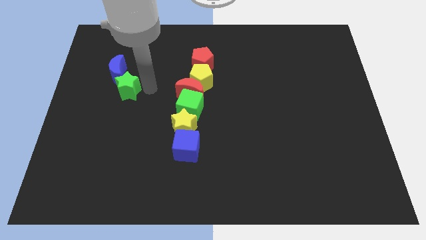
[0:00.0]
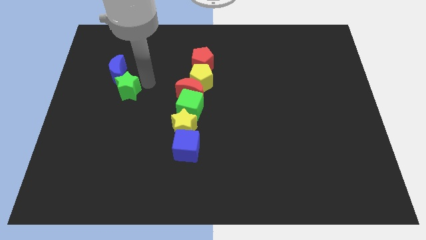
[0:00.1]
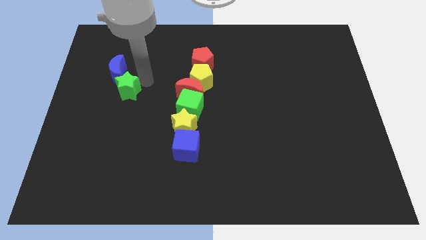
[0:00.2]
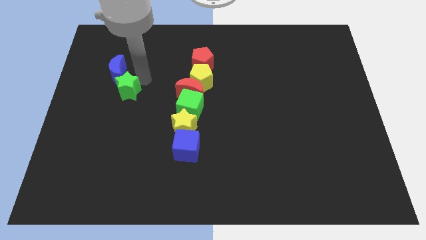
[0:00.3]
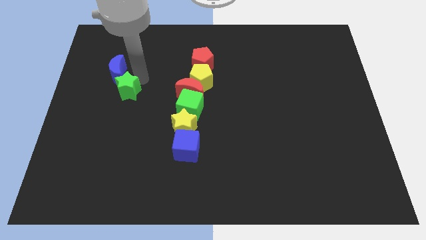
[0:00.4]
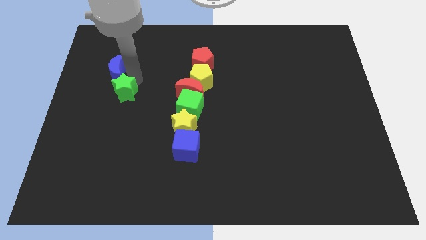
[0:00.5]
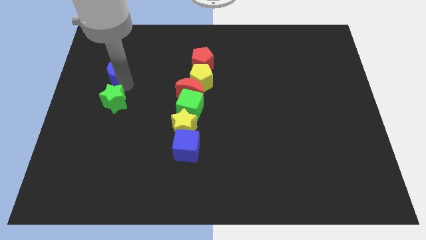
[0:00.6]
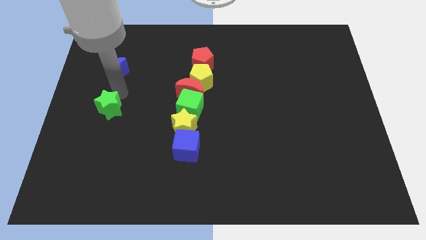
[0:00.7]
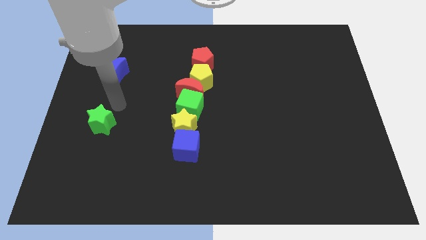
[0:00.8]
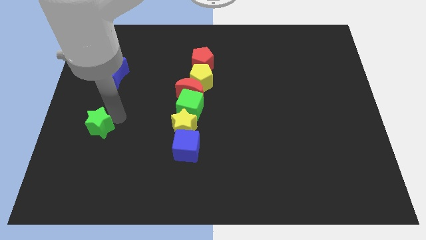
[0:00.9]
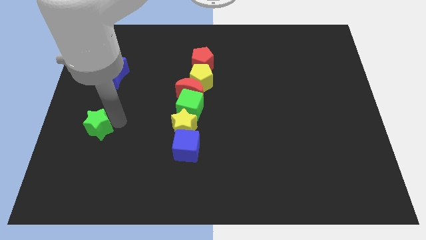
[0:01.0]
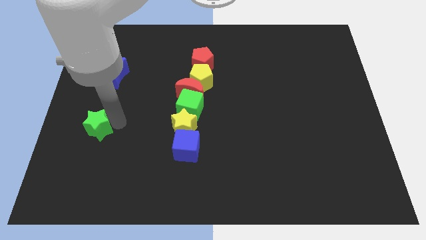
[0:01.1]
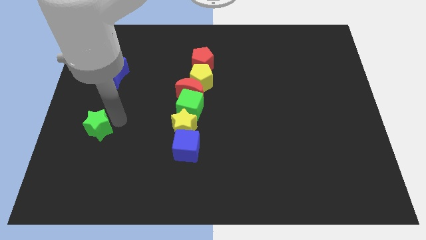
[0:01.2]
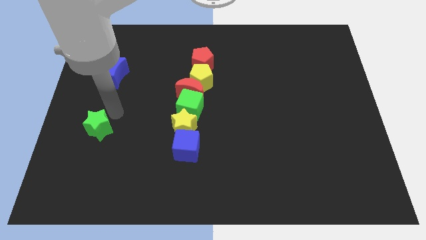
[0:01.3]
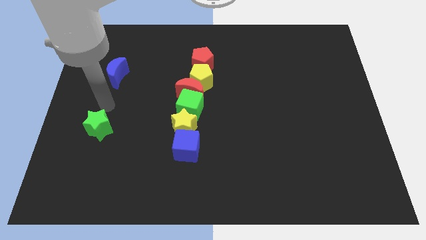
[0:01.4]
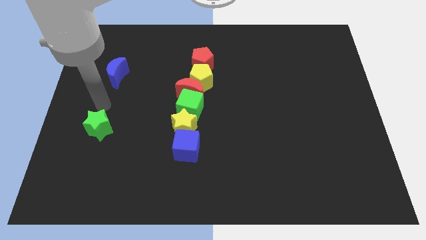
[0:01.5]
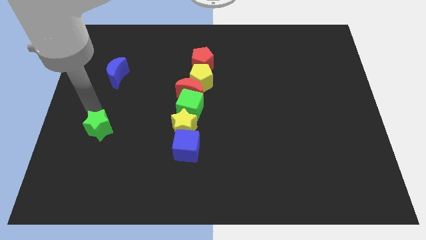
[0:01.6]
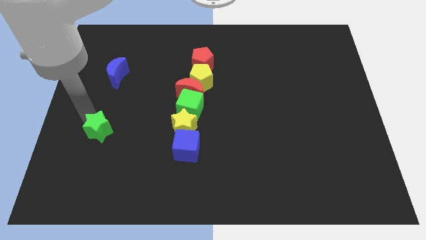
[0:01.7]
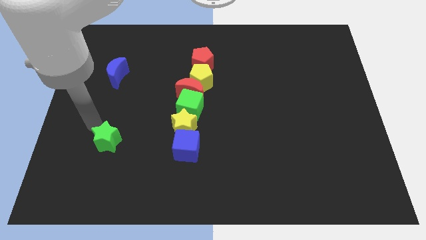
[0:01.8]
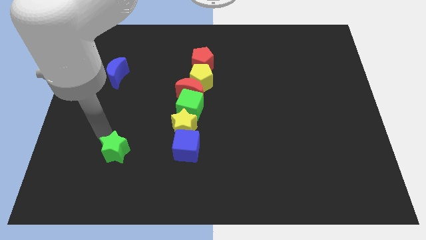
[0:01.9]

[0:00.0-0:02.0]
separate the green star from the blue moon

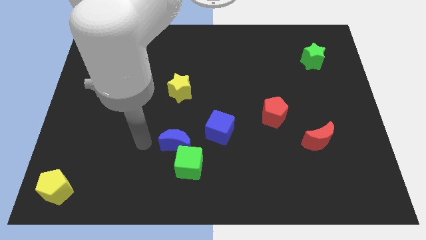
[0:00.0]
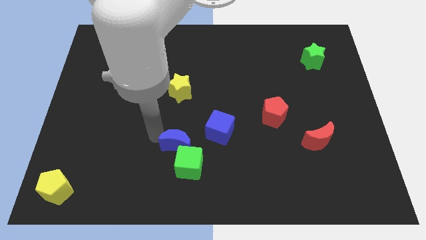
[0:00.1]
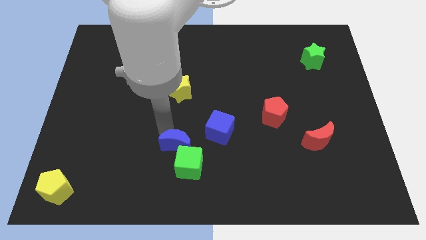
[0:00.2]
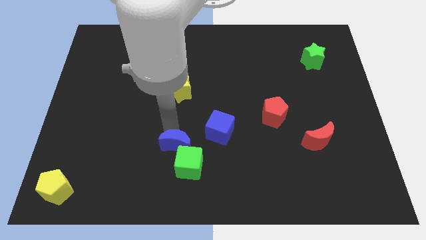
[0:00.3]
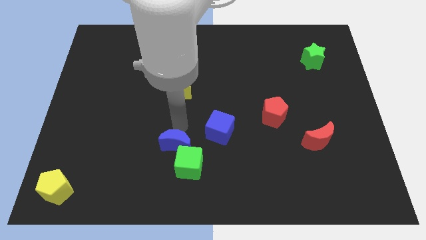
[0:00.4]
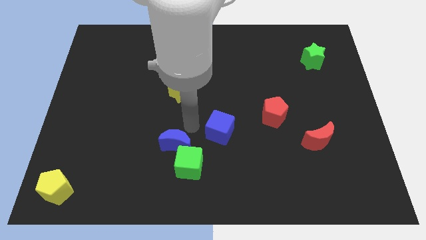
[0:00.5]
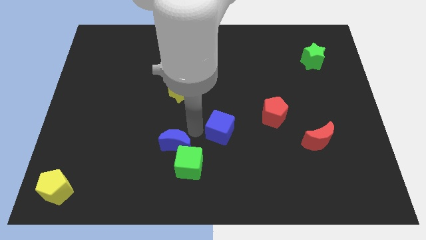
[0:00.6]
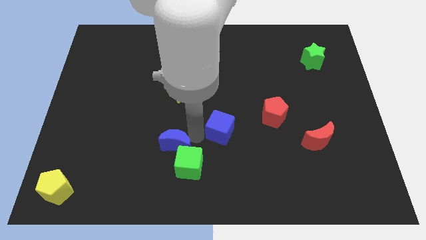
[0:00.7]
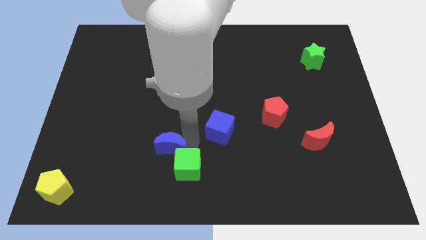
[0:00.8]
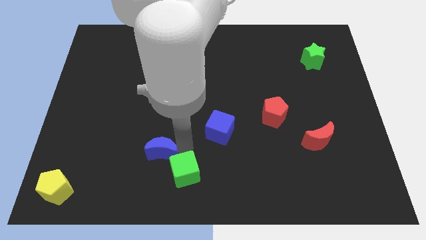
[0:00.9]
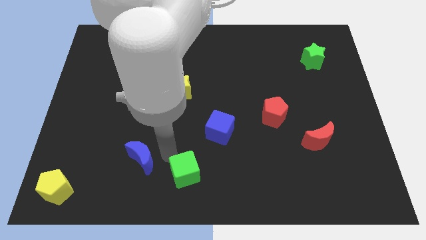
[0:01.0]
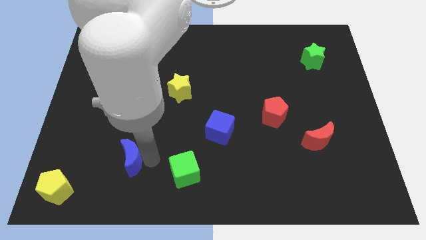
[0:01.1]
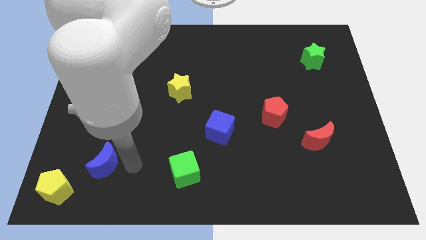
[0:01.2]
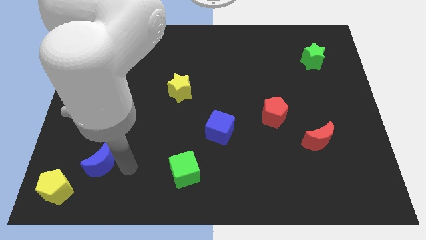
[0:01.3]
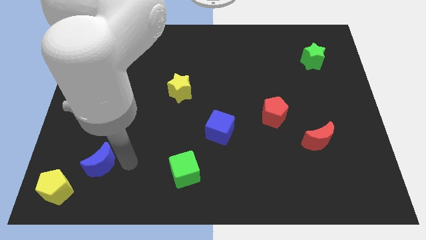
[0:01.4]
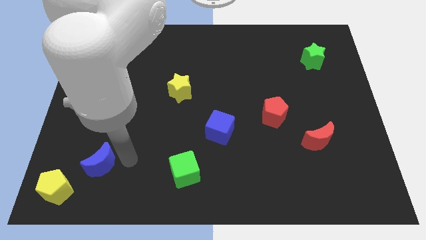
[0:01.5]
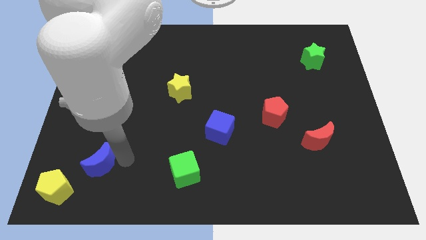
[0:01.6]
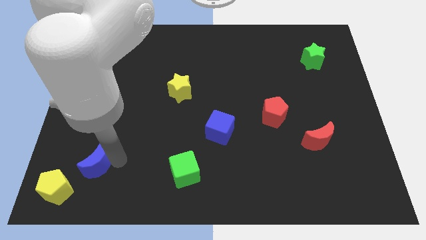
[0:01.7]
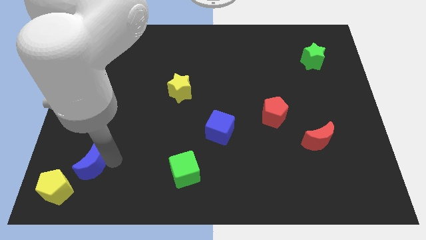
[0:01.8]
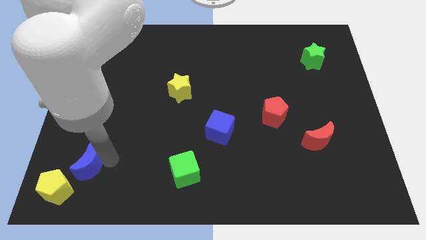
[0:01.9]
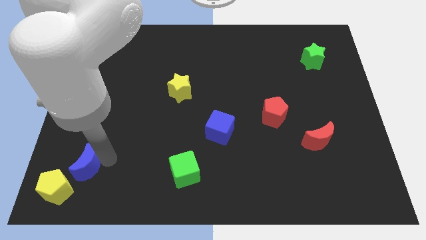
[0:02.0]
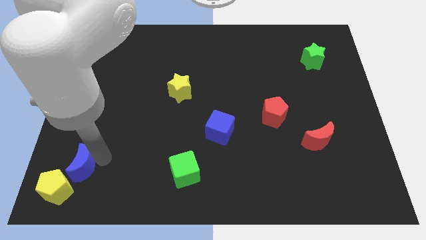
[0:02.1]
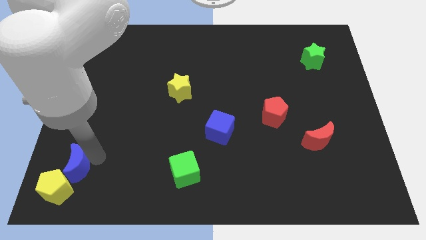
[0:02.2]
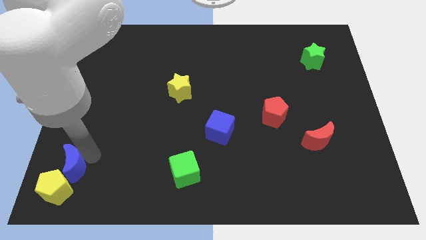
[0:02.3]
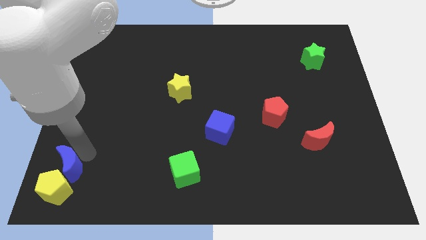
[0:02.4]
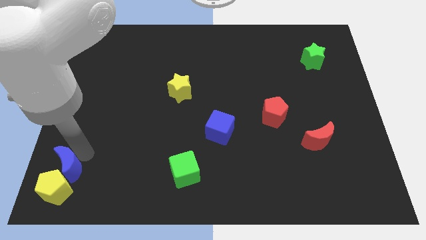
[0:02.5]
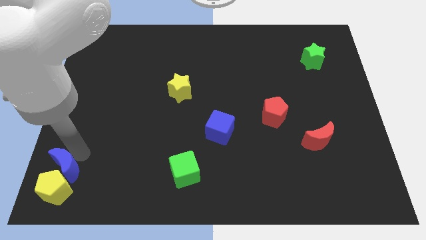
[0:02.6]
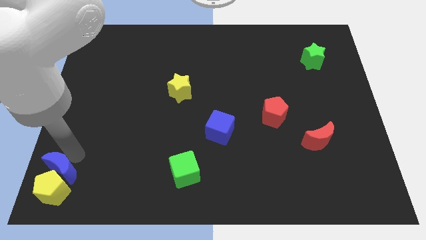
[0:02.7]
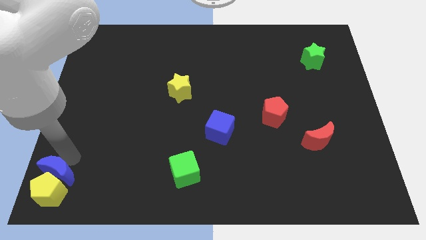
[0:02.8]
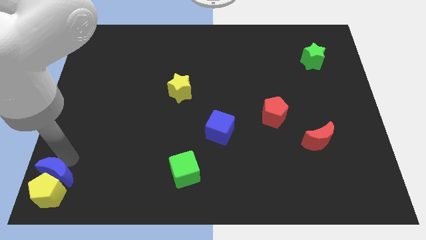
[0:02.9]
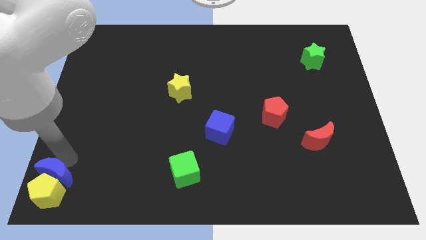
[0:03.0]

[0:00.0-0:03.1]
separate blue moon from green cube

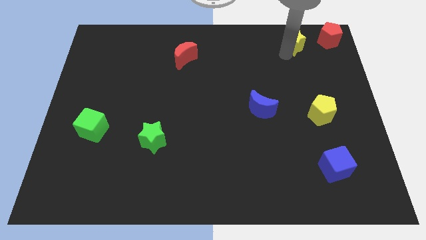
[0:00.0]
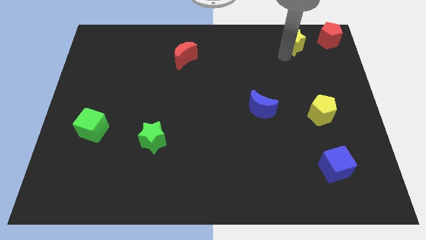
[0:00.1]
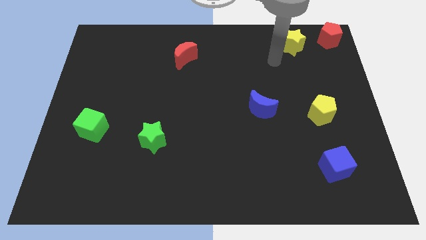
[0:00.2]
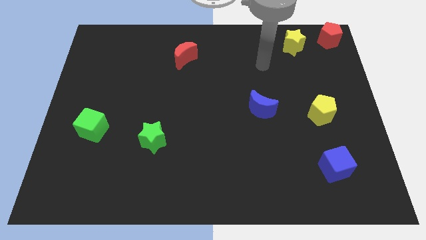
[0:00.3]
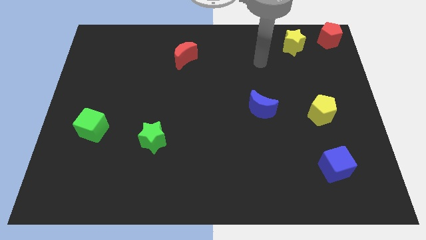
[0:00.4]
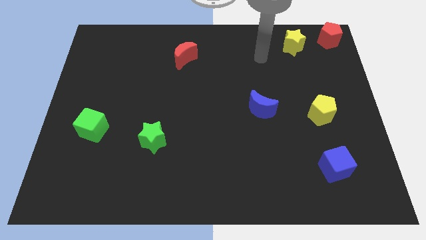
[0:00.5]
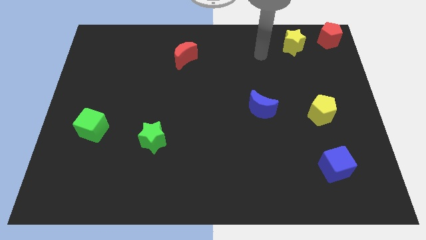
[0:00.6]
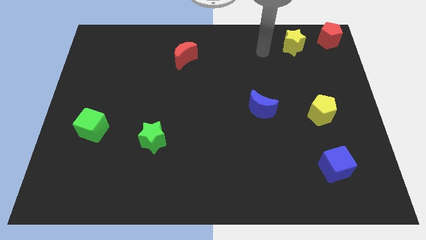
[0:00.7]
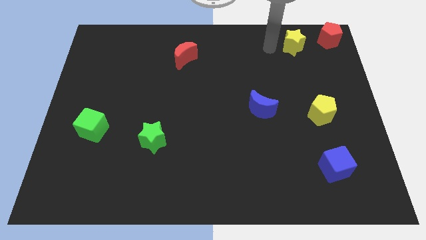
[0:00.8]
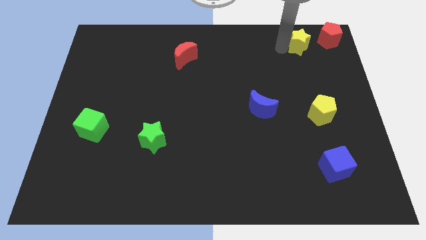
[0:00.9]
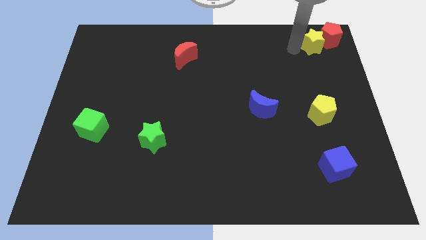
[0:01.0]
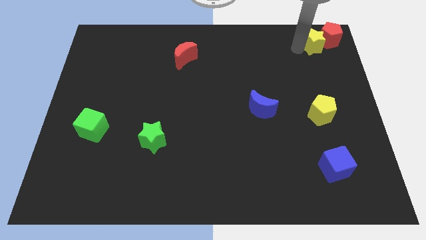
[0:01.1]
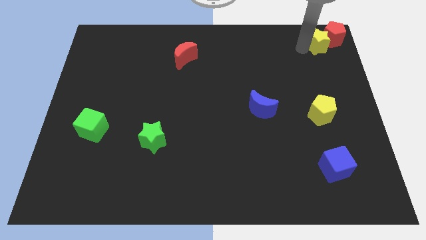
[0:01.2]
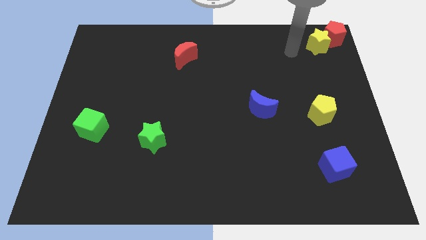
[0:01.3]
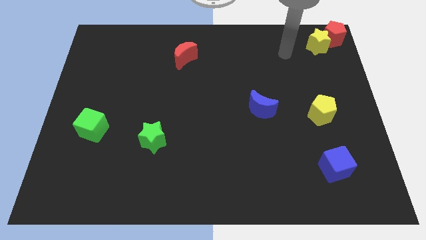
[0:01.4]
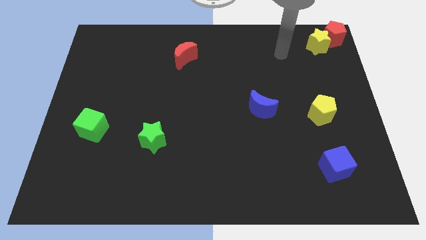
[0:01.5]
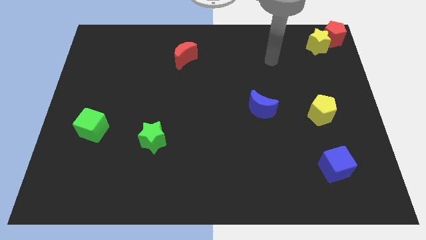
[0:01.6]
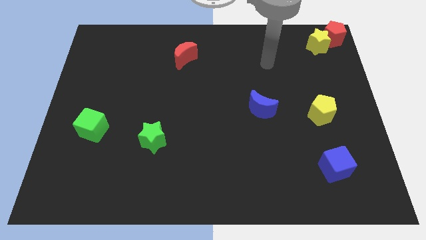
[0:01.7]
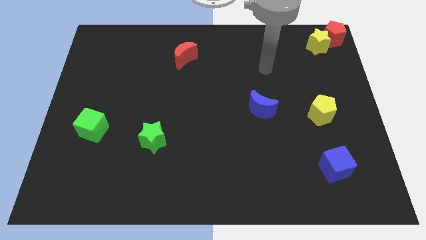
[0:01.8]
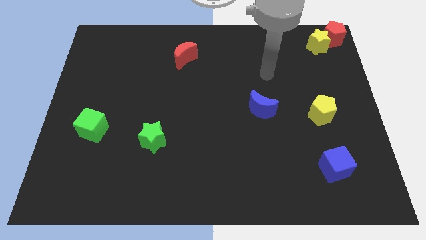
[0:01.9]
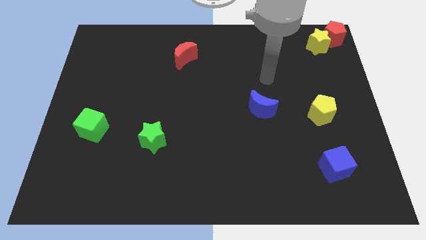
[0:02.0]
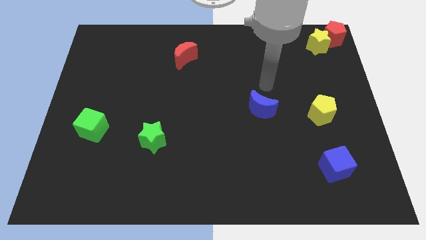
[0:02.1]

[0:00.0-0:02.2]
move the yellow star into the left of the red pentagon

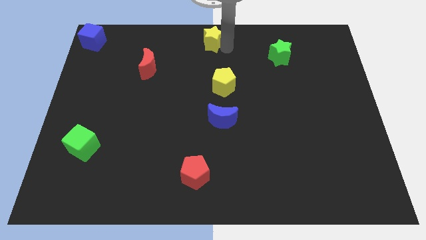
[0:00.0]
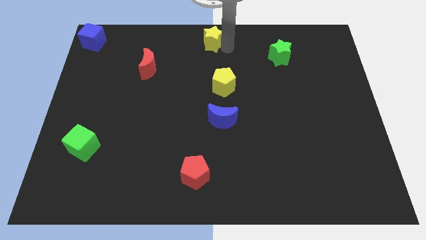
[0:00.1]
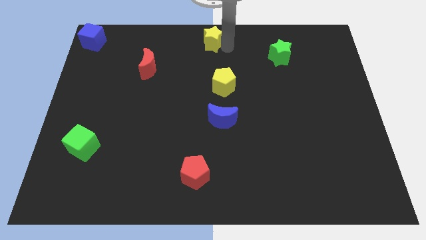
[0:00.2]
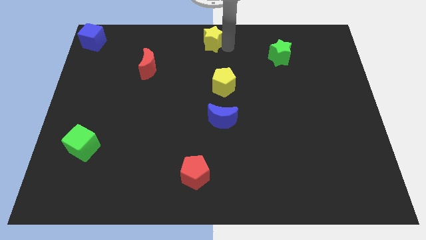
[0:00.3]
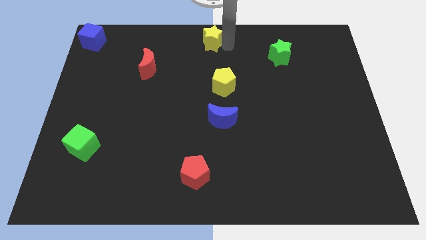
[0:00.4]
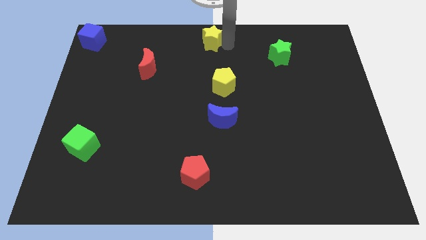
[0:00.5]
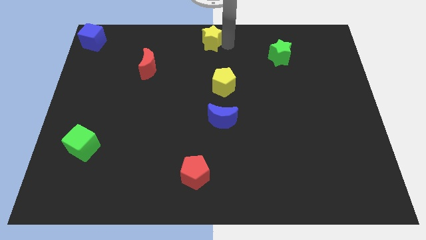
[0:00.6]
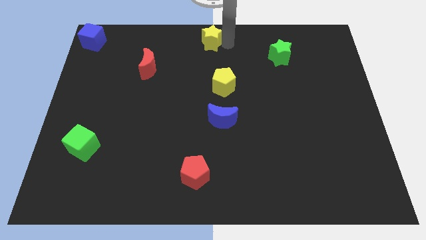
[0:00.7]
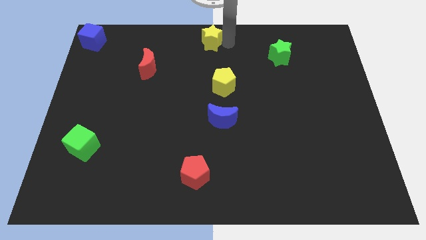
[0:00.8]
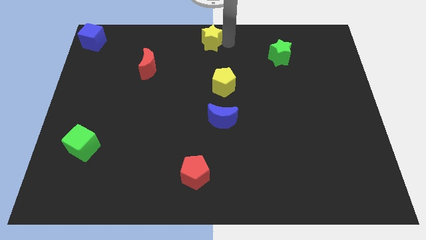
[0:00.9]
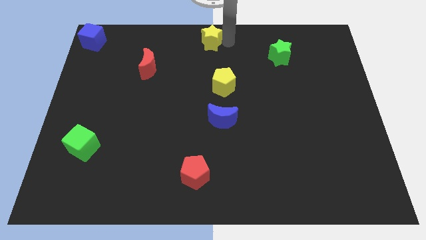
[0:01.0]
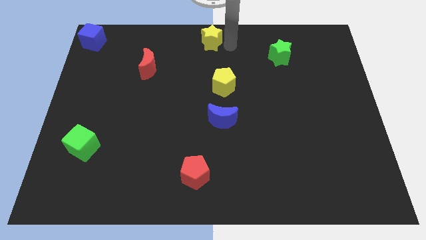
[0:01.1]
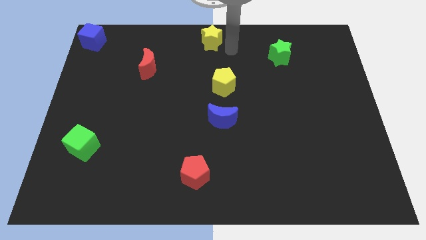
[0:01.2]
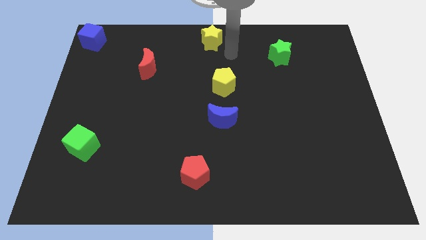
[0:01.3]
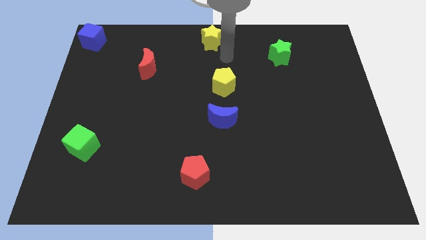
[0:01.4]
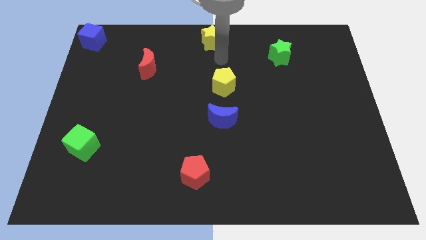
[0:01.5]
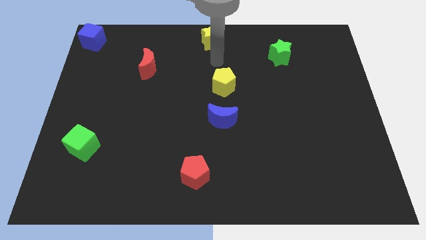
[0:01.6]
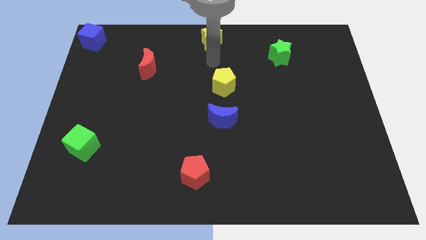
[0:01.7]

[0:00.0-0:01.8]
move your arm towards the right of the yellow star
